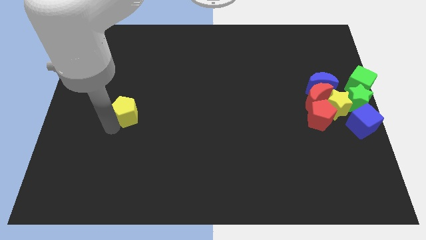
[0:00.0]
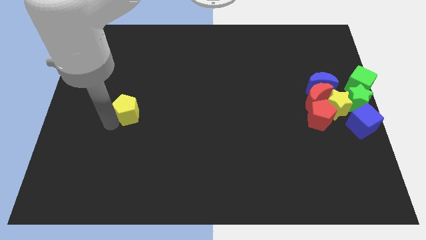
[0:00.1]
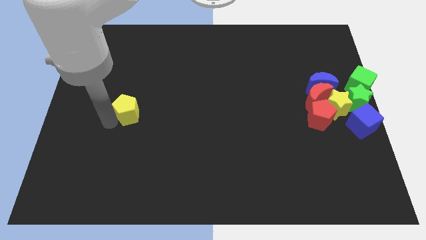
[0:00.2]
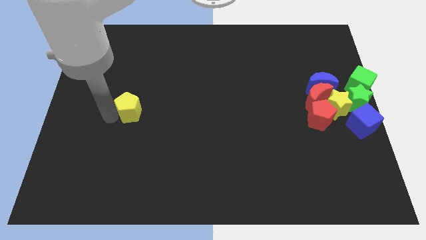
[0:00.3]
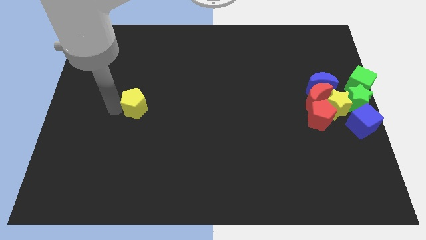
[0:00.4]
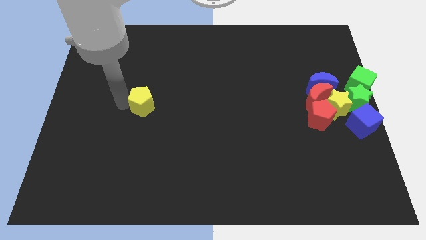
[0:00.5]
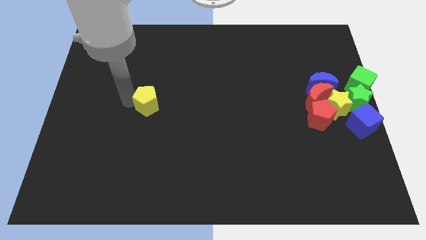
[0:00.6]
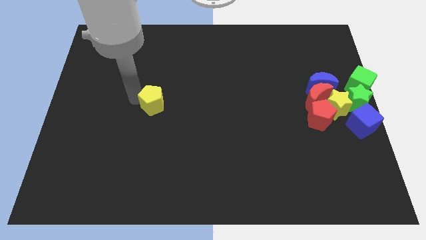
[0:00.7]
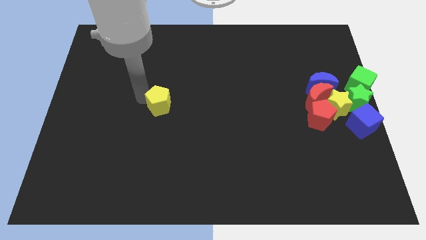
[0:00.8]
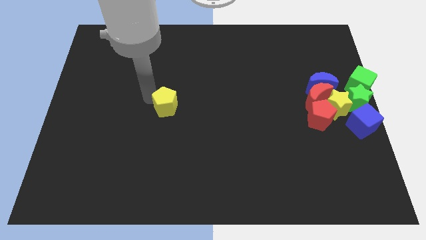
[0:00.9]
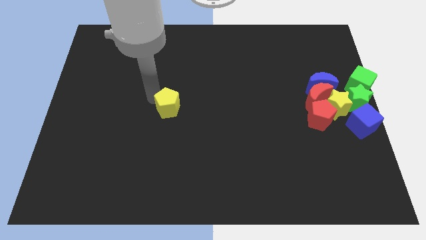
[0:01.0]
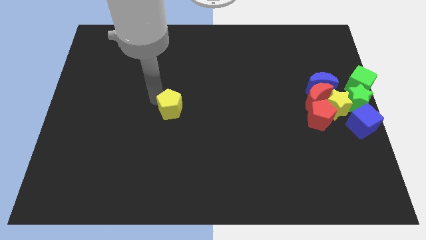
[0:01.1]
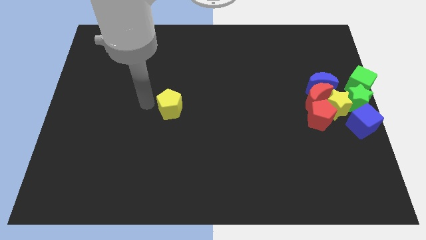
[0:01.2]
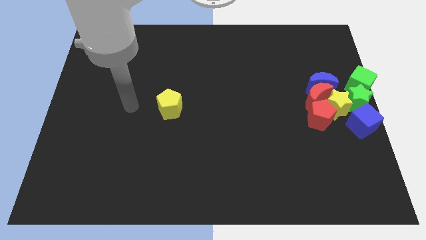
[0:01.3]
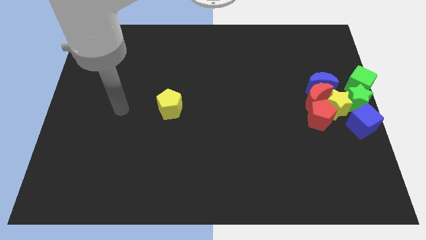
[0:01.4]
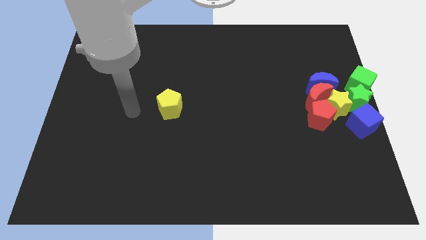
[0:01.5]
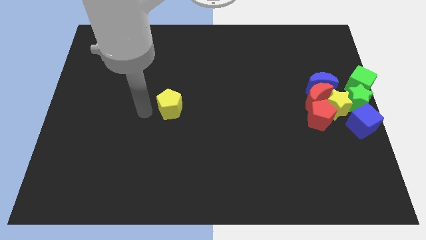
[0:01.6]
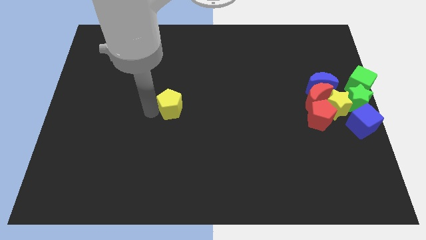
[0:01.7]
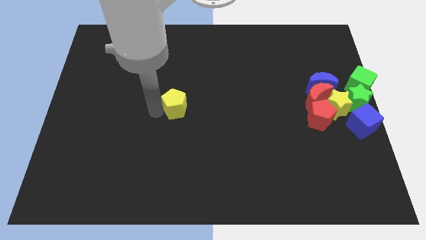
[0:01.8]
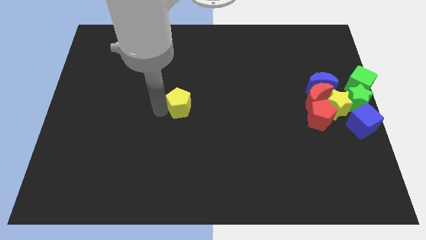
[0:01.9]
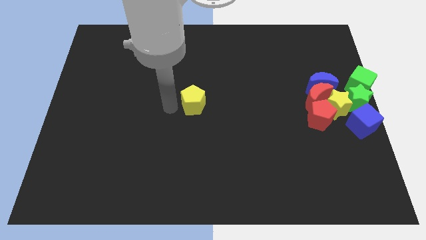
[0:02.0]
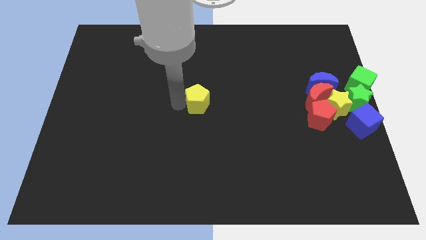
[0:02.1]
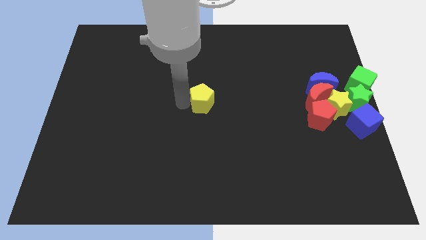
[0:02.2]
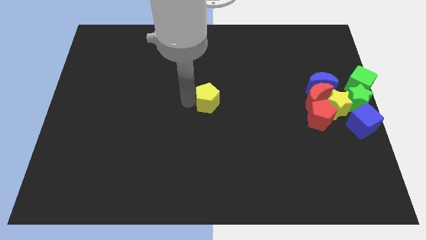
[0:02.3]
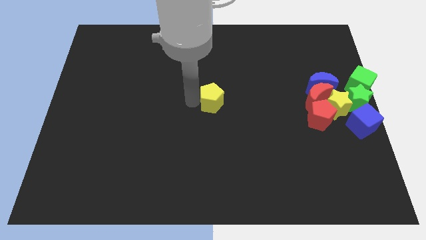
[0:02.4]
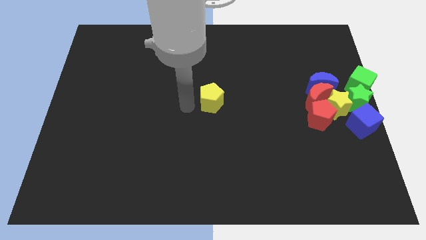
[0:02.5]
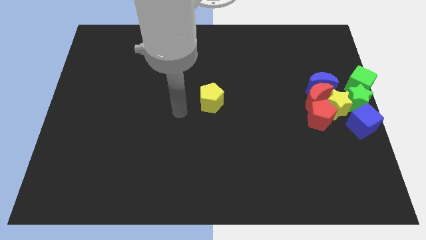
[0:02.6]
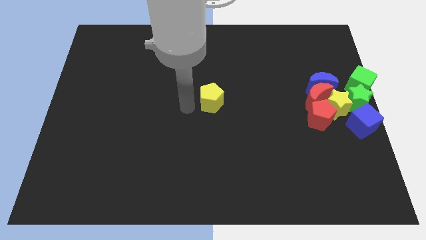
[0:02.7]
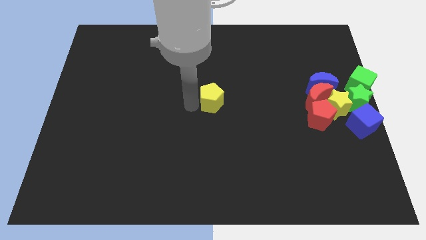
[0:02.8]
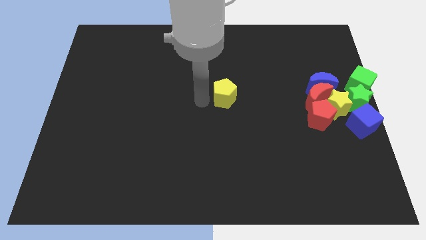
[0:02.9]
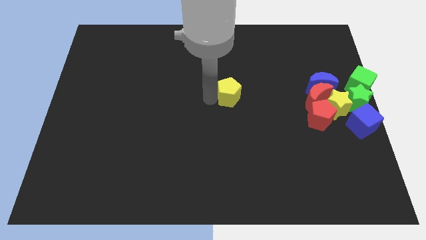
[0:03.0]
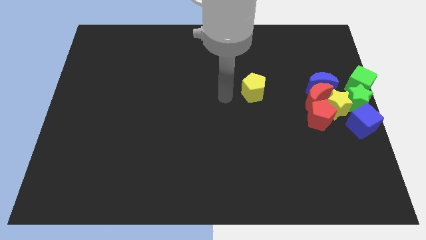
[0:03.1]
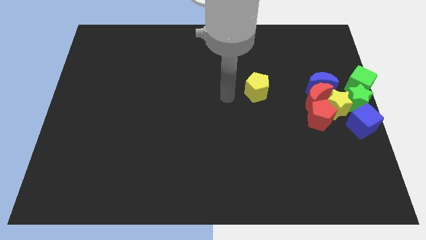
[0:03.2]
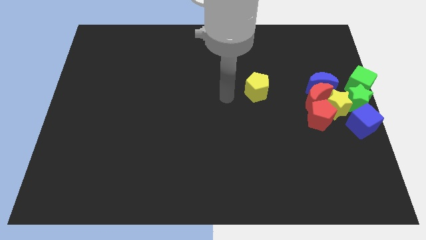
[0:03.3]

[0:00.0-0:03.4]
slide the yellow pentagon towards right

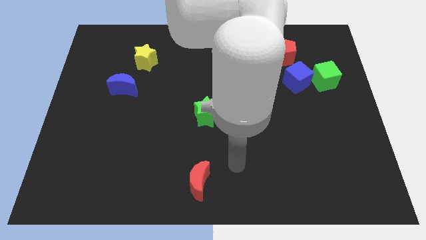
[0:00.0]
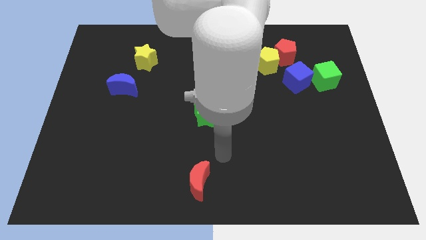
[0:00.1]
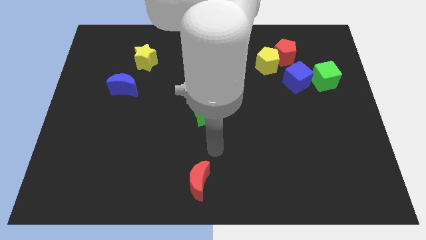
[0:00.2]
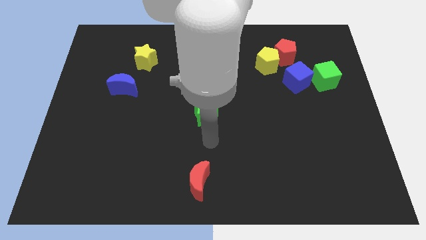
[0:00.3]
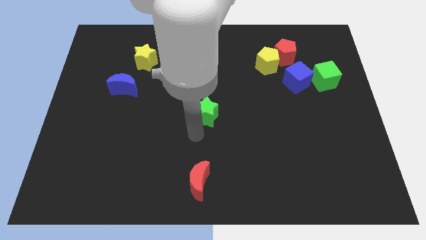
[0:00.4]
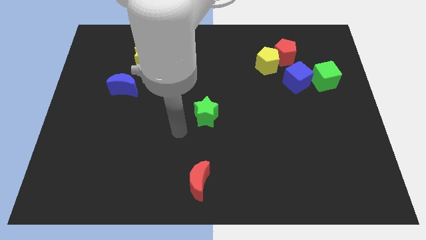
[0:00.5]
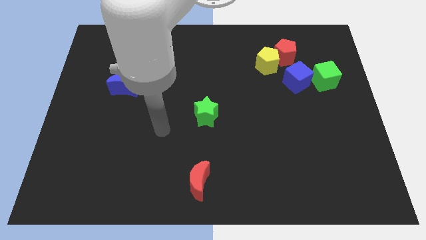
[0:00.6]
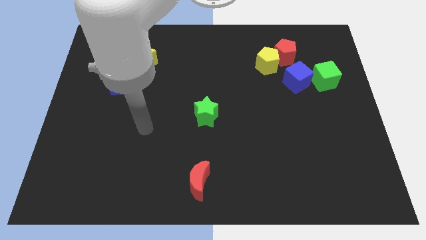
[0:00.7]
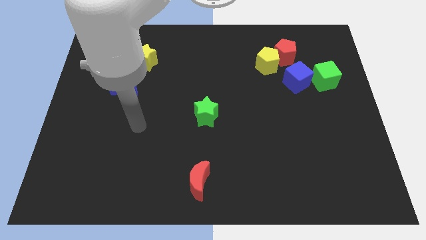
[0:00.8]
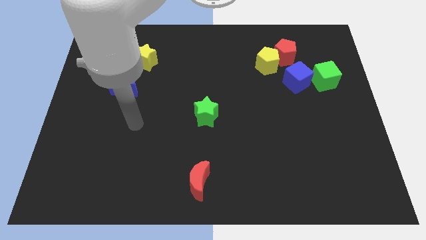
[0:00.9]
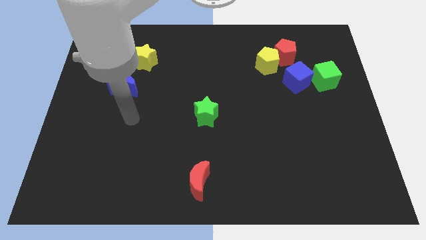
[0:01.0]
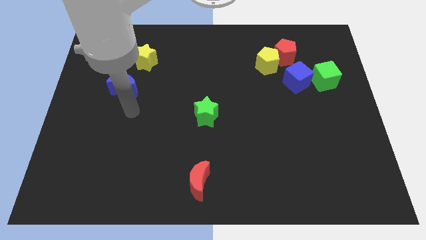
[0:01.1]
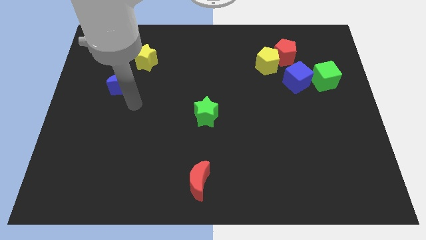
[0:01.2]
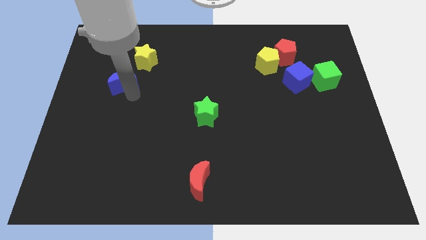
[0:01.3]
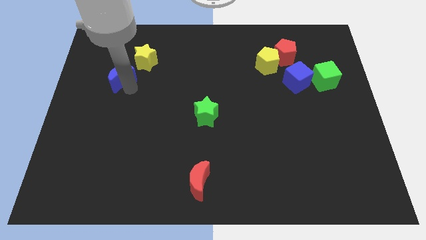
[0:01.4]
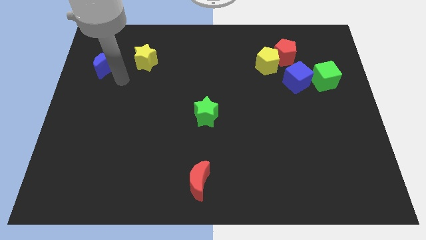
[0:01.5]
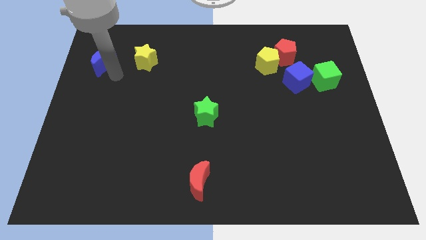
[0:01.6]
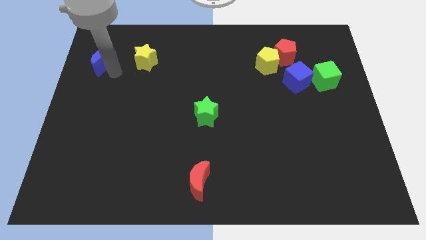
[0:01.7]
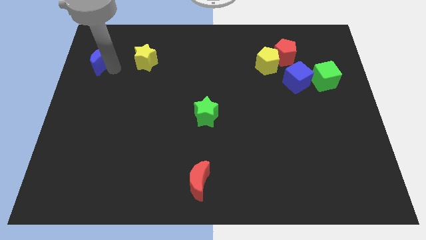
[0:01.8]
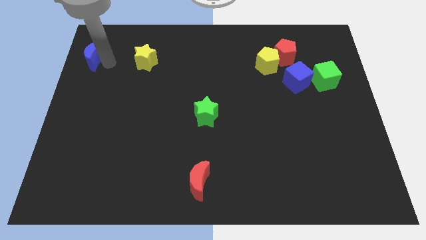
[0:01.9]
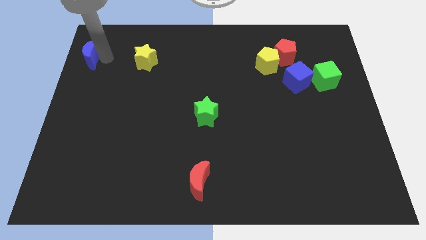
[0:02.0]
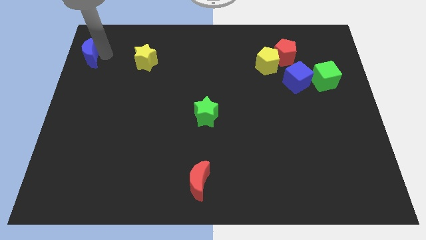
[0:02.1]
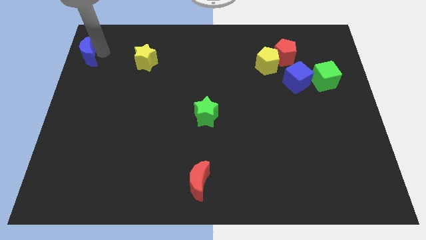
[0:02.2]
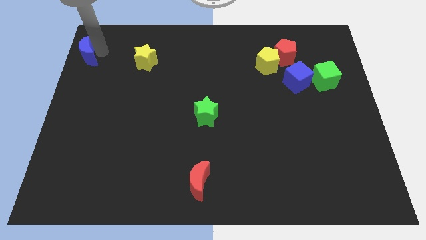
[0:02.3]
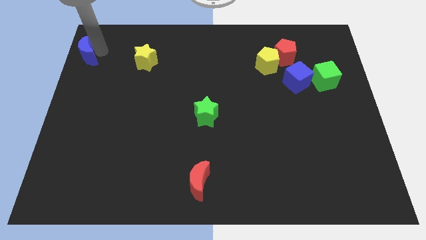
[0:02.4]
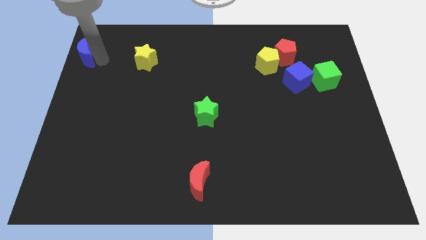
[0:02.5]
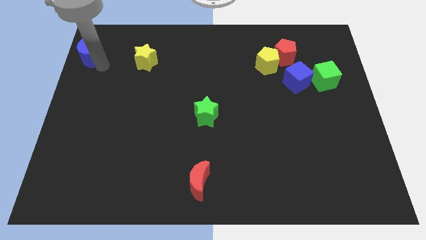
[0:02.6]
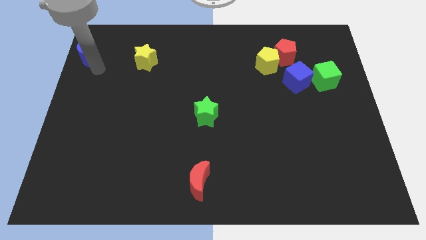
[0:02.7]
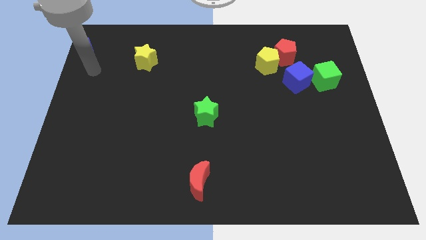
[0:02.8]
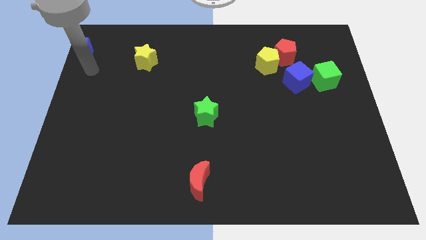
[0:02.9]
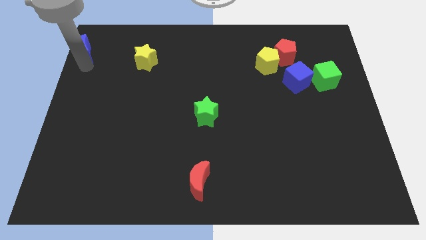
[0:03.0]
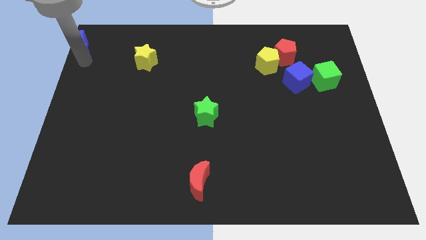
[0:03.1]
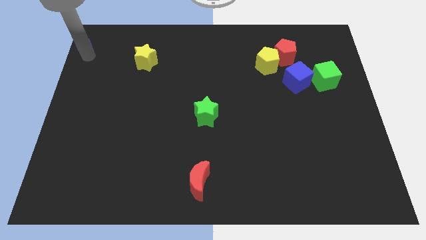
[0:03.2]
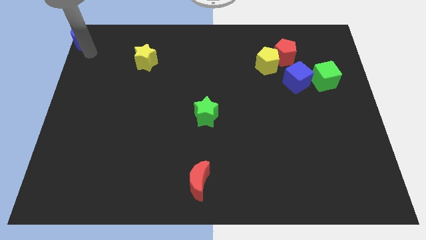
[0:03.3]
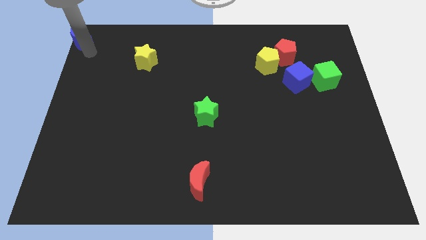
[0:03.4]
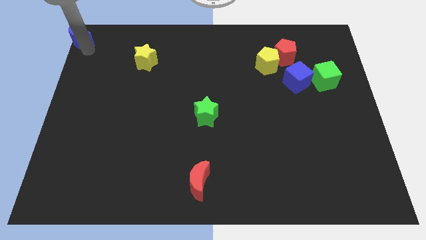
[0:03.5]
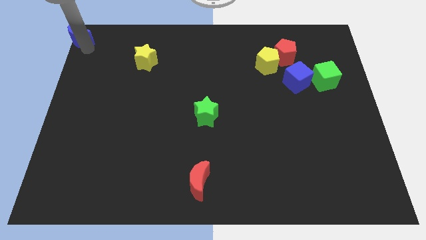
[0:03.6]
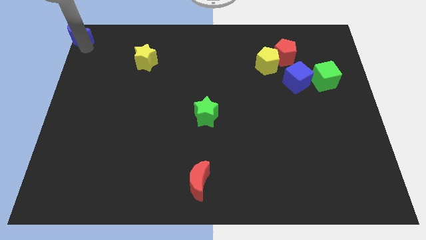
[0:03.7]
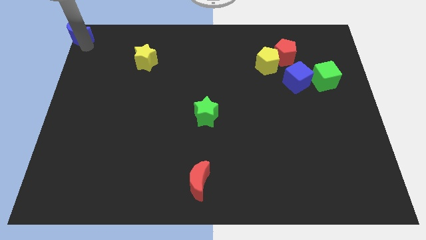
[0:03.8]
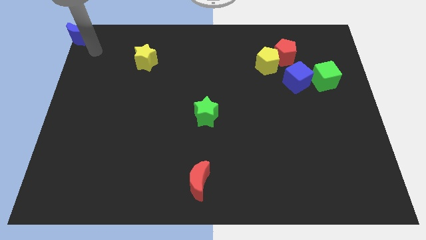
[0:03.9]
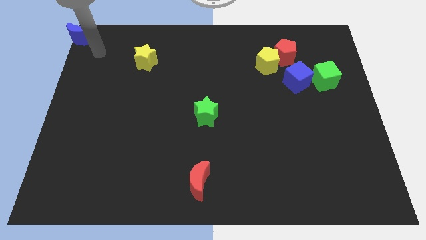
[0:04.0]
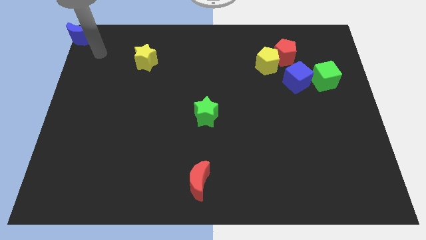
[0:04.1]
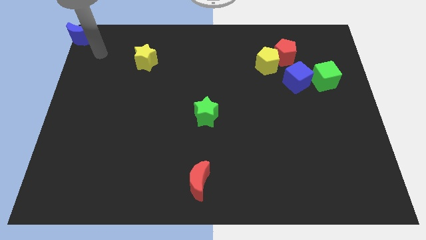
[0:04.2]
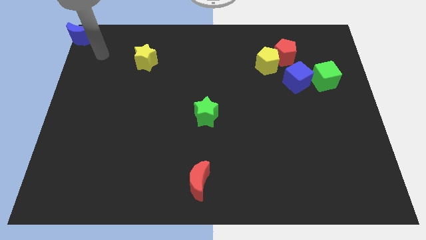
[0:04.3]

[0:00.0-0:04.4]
place the blue moon at the top left corner of the board

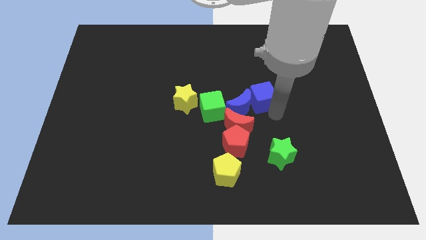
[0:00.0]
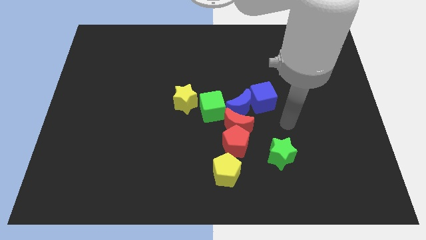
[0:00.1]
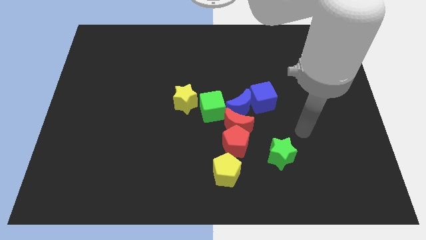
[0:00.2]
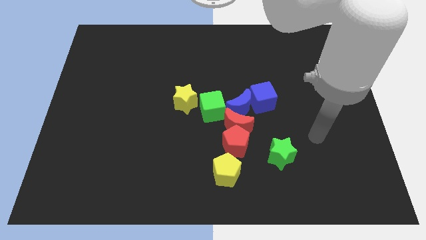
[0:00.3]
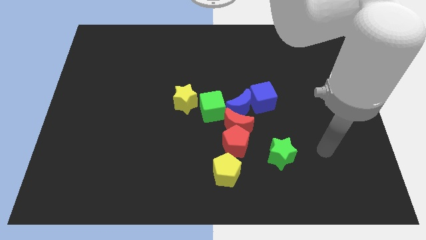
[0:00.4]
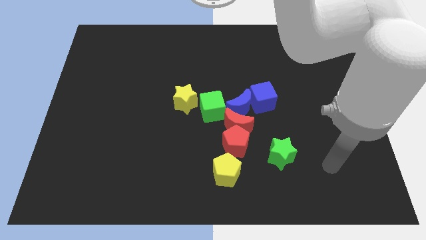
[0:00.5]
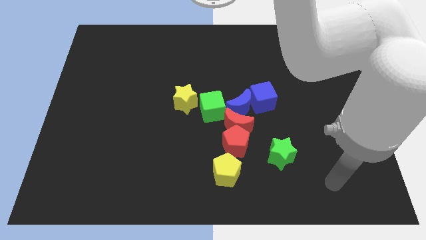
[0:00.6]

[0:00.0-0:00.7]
move the arm away from the blue cube

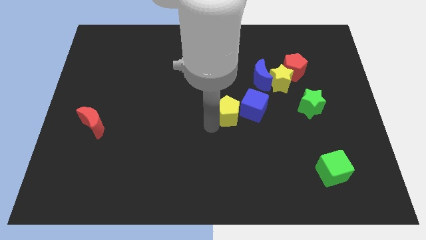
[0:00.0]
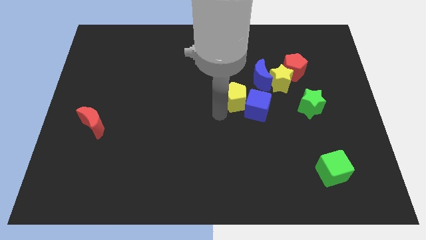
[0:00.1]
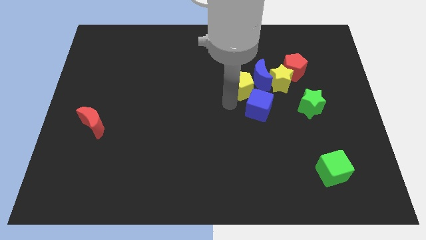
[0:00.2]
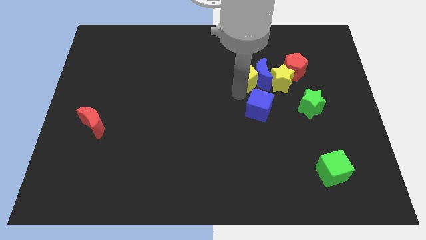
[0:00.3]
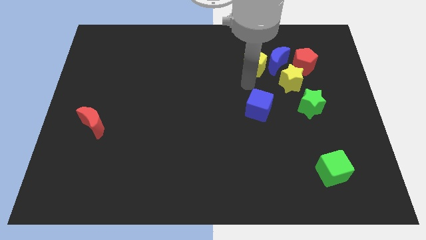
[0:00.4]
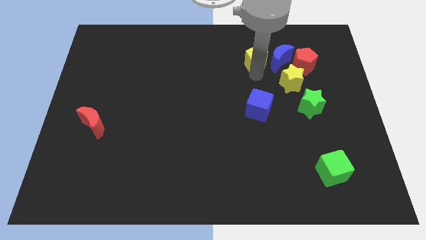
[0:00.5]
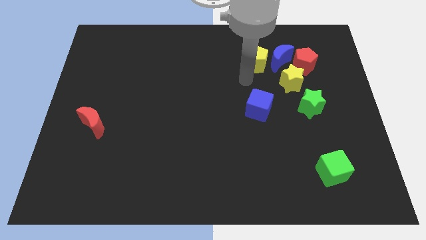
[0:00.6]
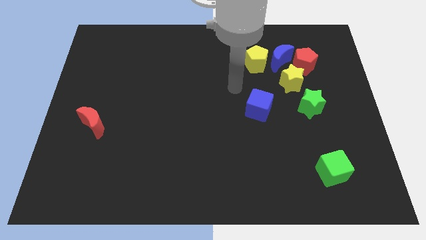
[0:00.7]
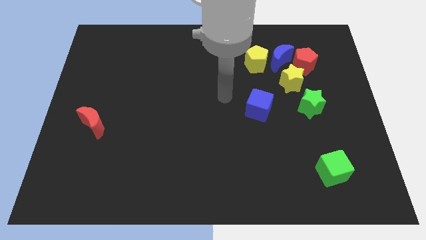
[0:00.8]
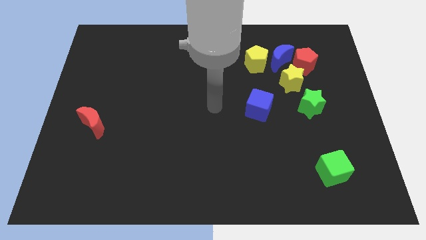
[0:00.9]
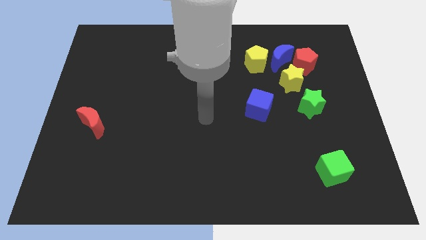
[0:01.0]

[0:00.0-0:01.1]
push the yellow pentagon to the left of the blue crescent
